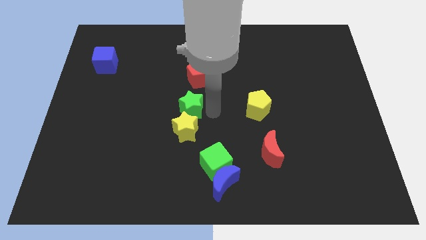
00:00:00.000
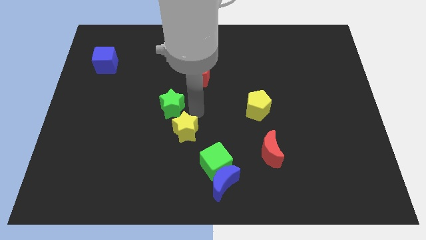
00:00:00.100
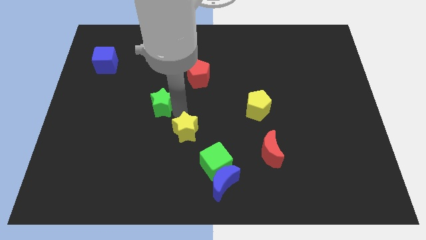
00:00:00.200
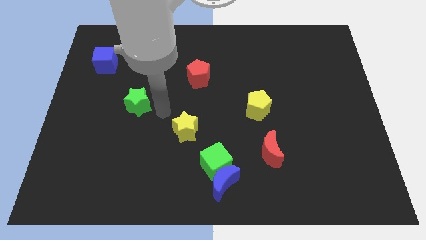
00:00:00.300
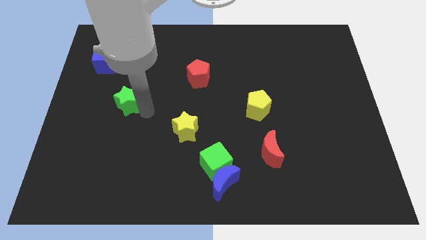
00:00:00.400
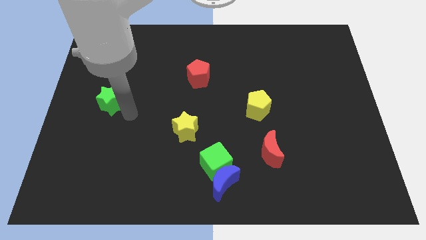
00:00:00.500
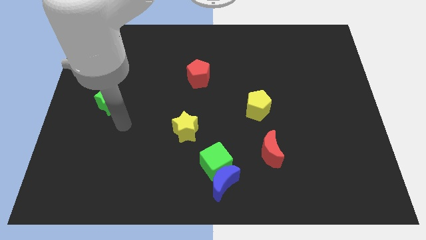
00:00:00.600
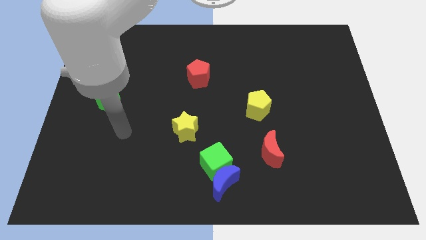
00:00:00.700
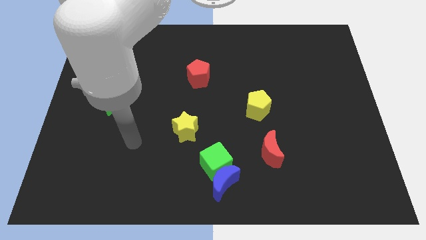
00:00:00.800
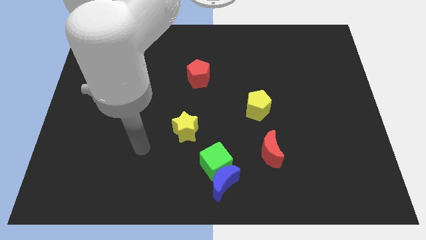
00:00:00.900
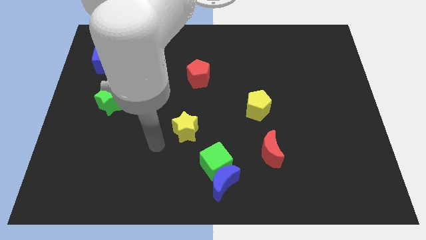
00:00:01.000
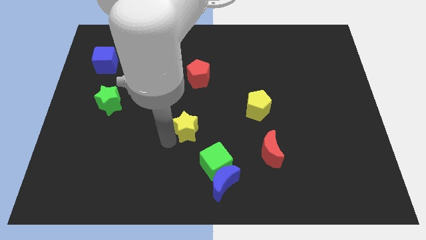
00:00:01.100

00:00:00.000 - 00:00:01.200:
push the green star towards the center left

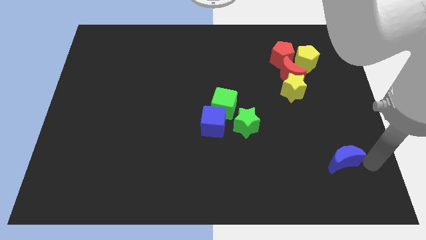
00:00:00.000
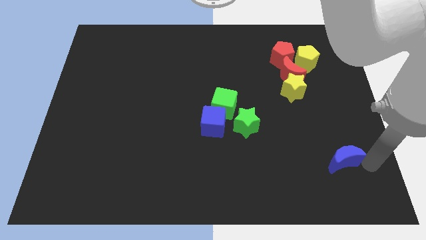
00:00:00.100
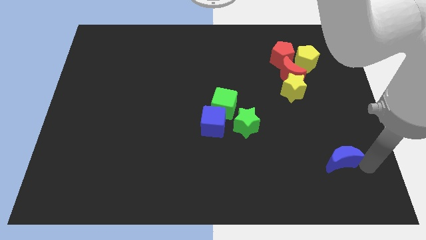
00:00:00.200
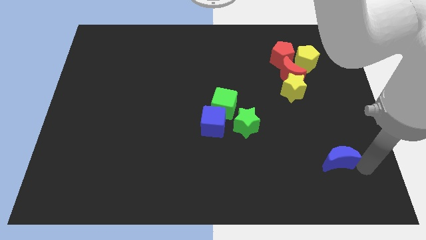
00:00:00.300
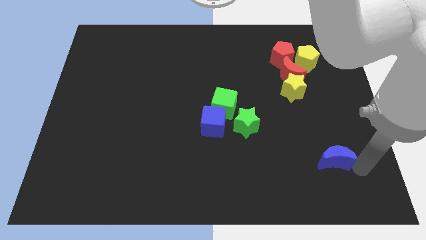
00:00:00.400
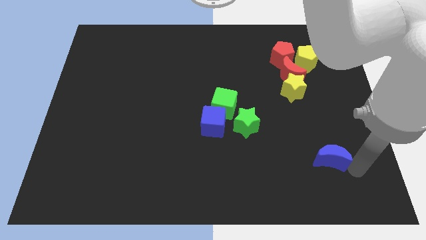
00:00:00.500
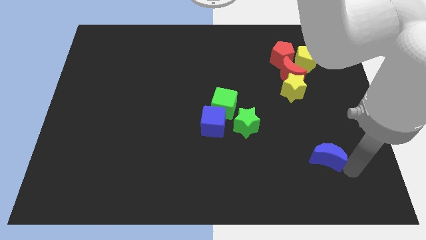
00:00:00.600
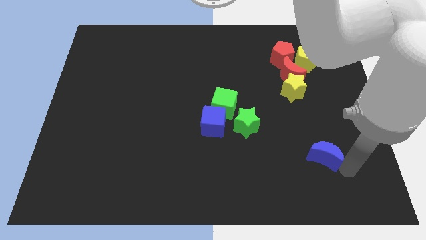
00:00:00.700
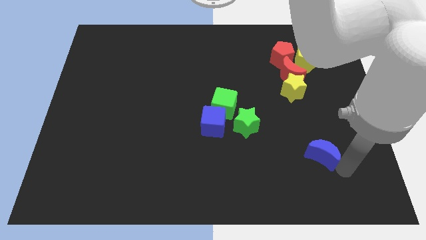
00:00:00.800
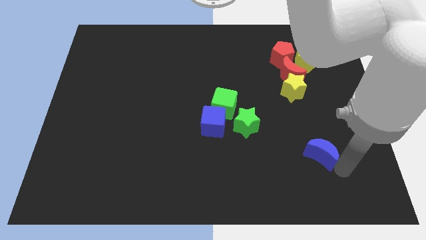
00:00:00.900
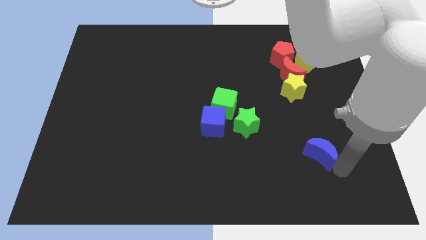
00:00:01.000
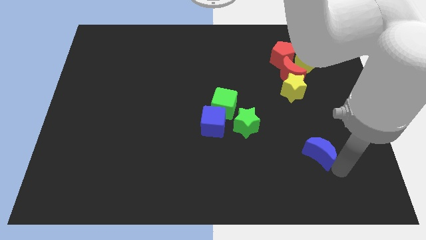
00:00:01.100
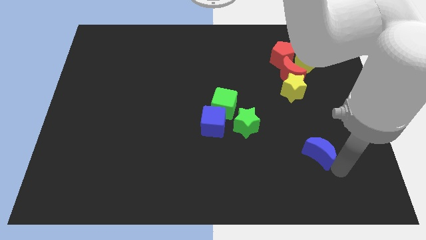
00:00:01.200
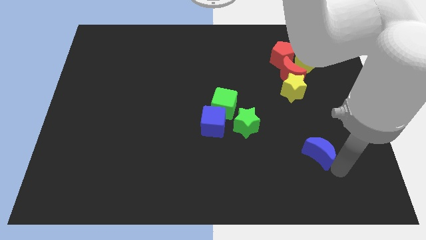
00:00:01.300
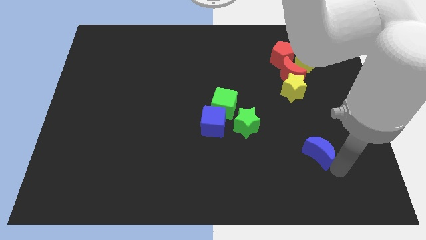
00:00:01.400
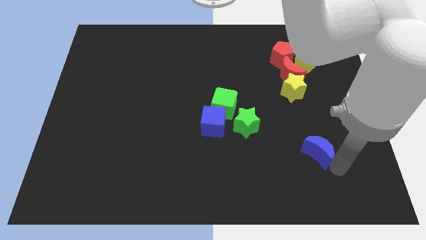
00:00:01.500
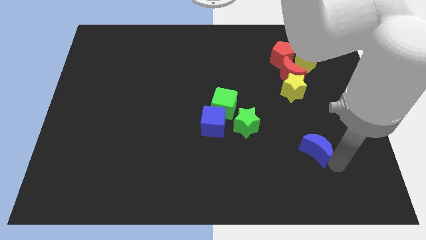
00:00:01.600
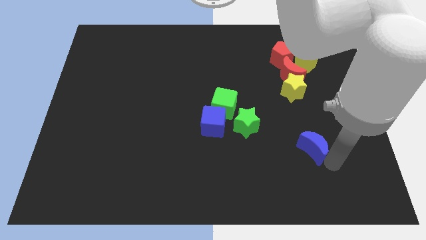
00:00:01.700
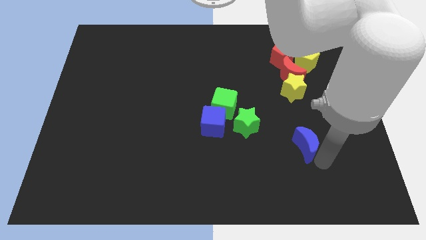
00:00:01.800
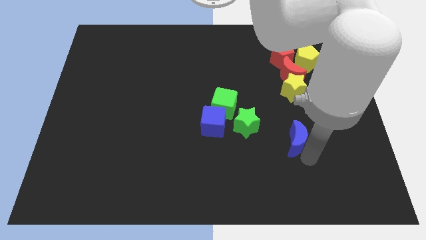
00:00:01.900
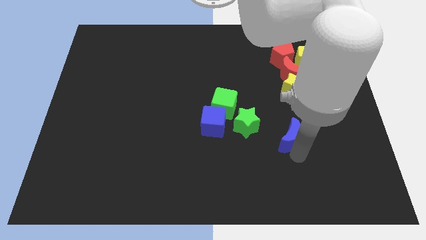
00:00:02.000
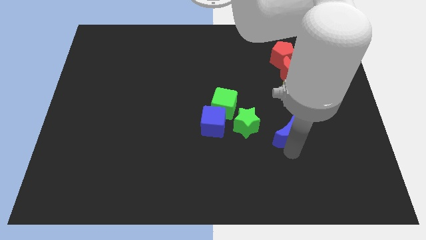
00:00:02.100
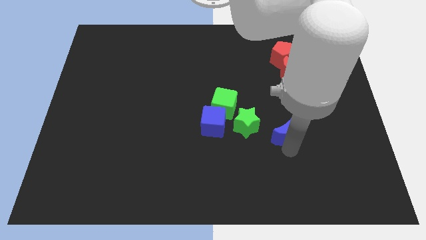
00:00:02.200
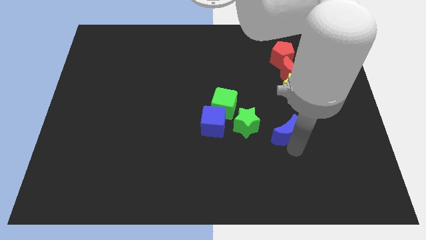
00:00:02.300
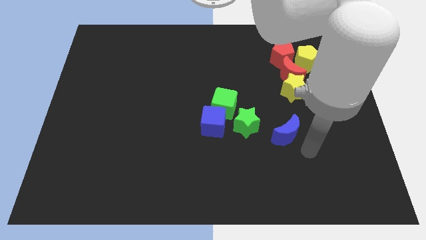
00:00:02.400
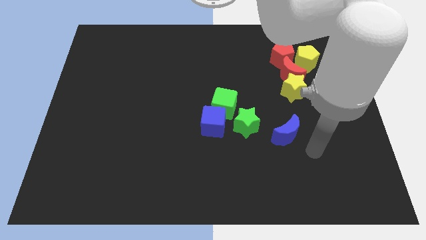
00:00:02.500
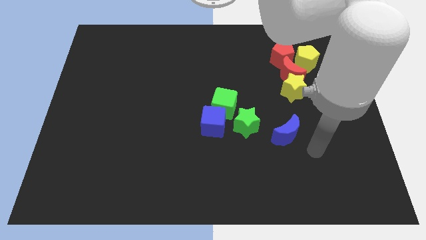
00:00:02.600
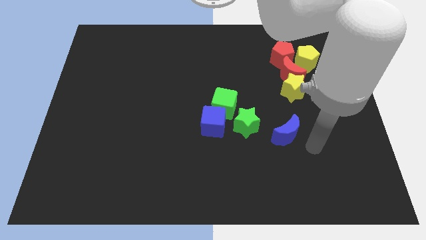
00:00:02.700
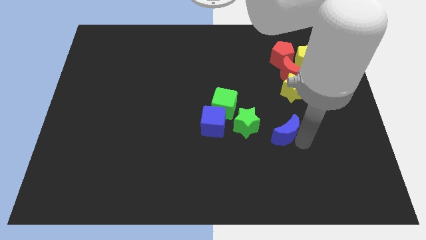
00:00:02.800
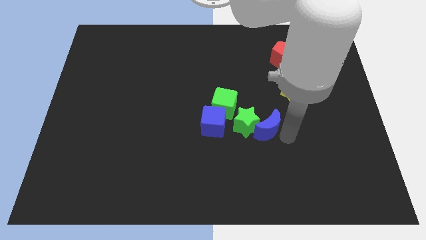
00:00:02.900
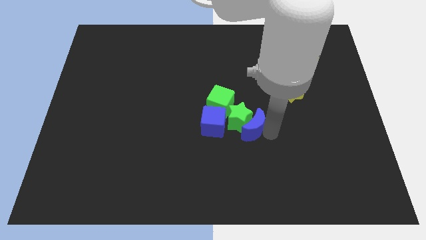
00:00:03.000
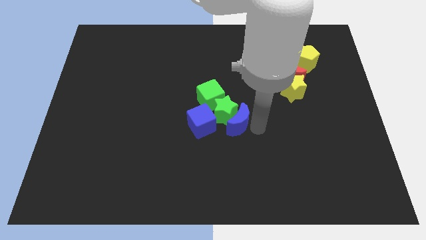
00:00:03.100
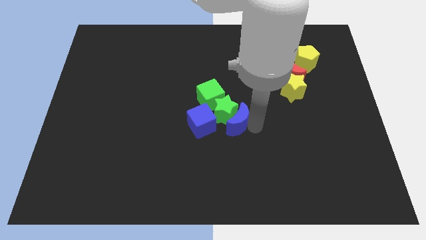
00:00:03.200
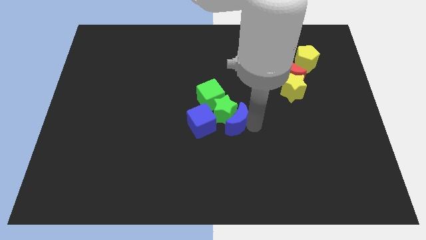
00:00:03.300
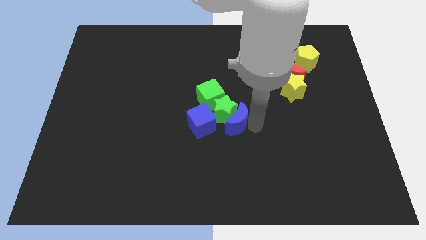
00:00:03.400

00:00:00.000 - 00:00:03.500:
add the blue crescent to both the green blocks and blue cube

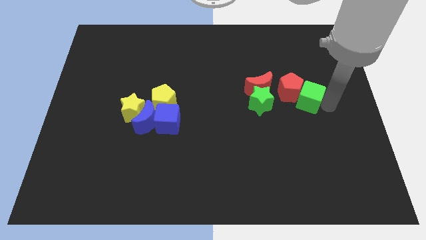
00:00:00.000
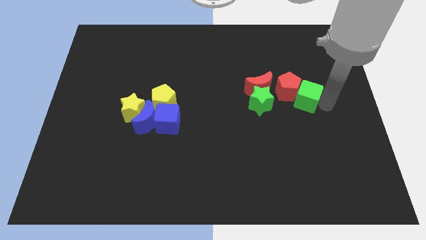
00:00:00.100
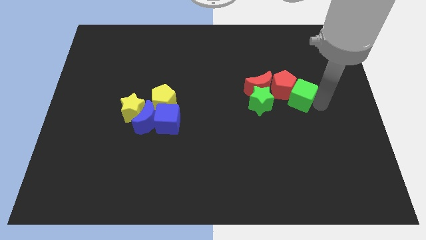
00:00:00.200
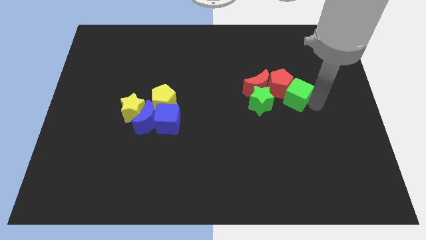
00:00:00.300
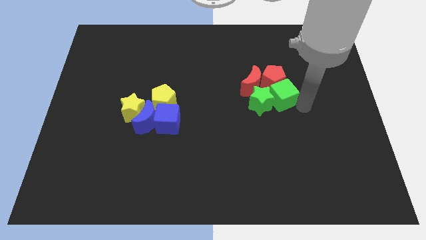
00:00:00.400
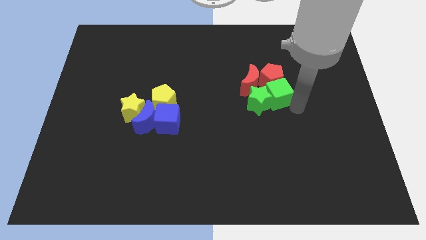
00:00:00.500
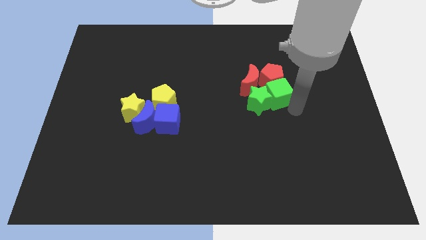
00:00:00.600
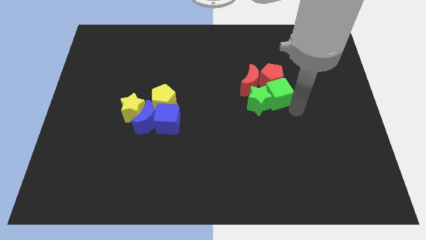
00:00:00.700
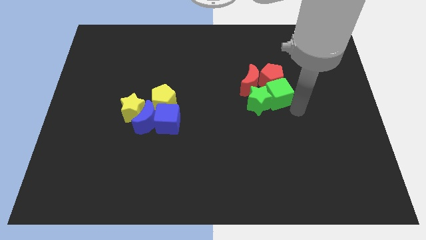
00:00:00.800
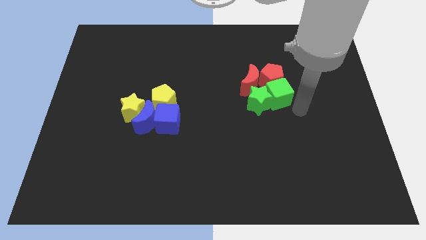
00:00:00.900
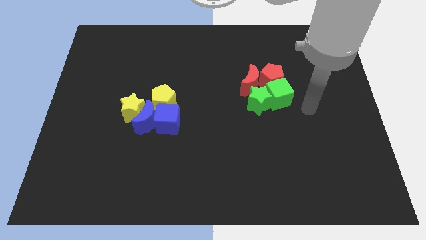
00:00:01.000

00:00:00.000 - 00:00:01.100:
move the green cube to the right of the green star

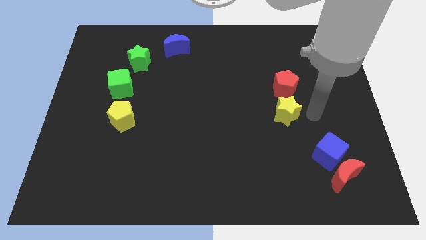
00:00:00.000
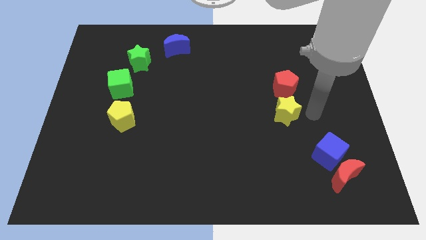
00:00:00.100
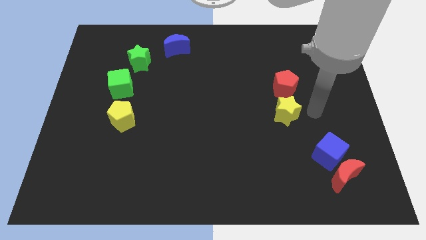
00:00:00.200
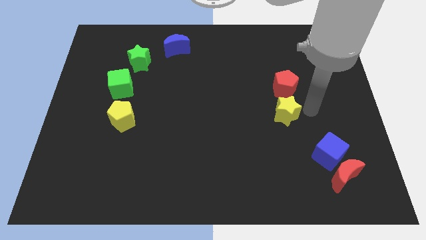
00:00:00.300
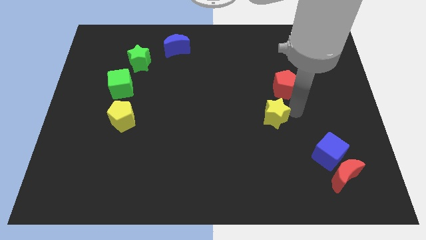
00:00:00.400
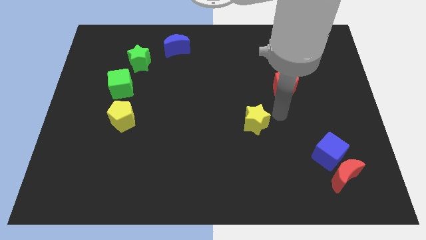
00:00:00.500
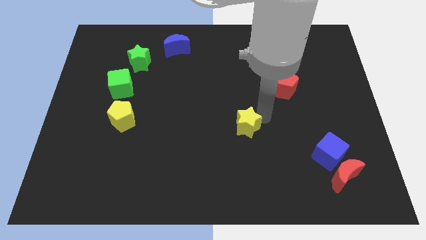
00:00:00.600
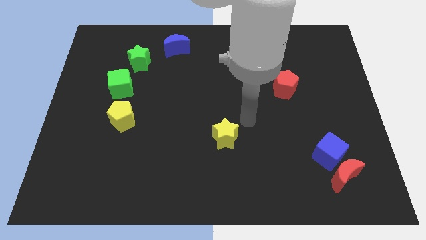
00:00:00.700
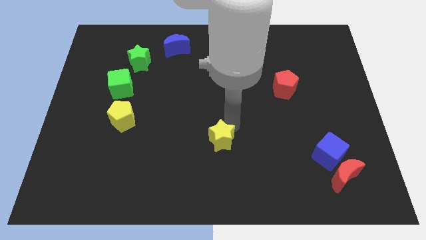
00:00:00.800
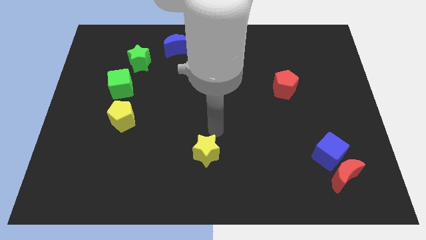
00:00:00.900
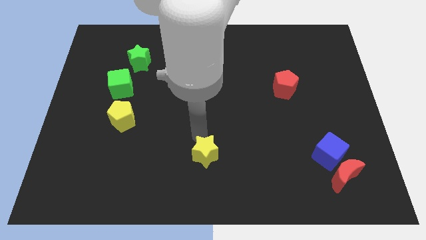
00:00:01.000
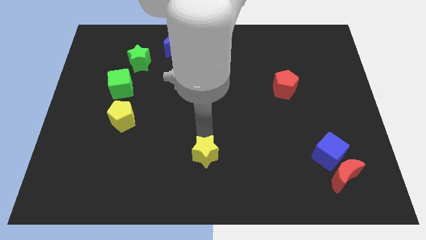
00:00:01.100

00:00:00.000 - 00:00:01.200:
separate the yellow star and the red pentagon

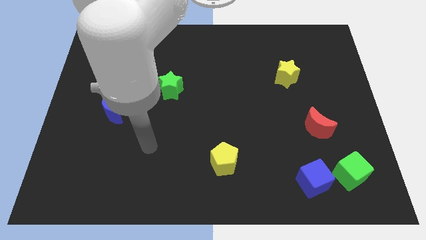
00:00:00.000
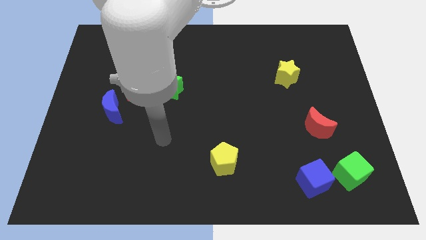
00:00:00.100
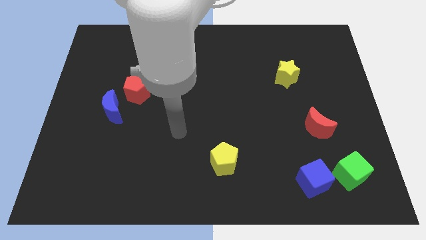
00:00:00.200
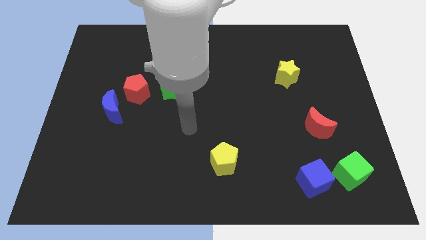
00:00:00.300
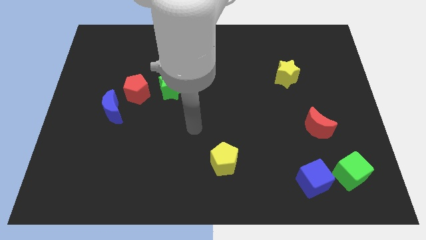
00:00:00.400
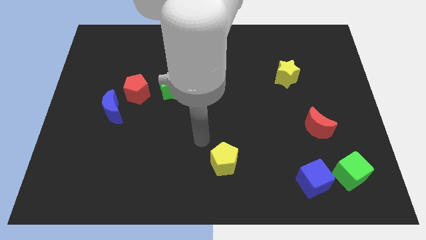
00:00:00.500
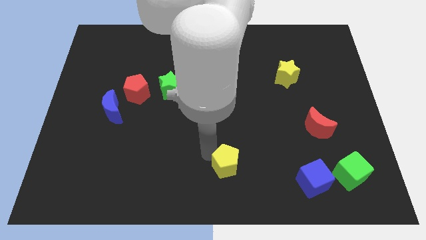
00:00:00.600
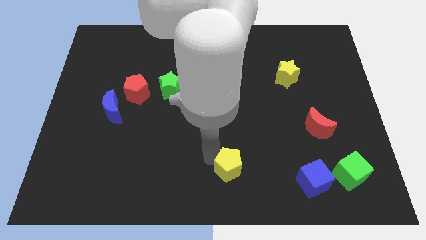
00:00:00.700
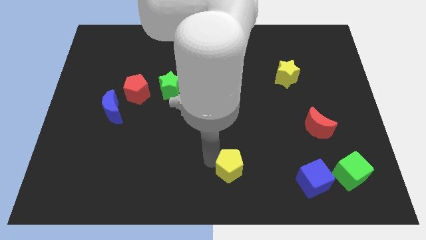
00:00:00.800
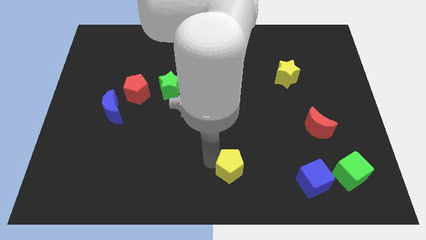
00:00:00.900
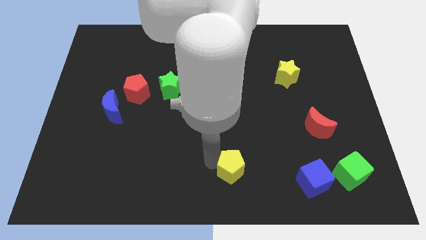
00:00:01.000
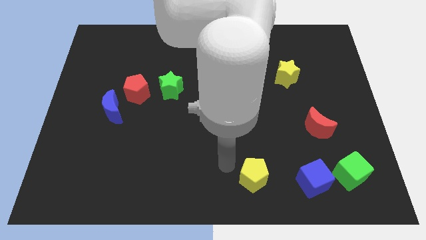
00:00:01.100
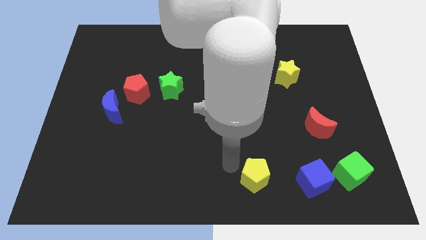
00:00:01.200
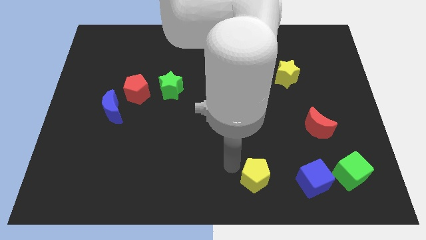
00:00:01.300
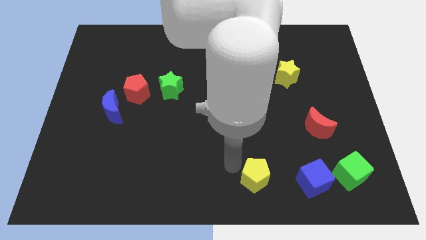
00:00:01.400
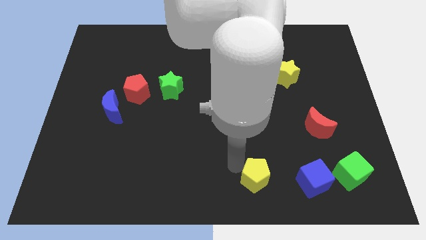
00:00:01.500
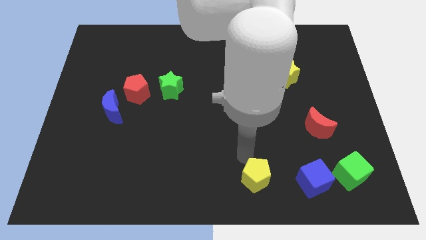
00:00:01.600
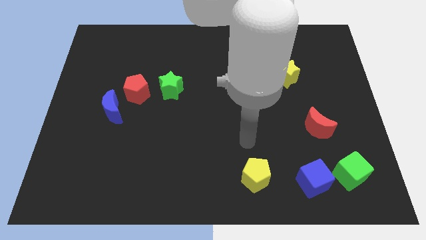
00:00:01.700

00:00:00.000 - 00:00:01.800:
push the yellow pentagon to the left of the blue cube

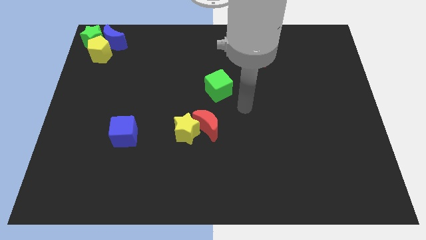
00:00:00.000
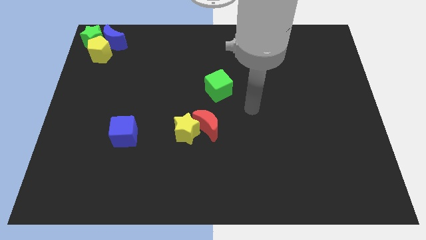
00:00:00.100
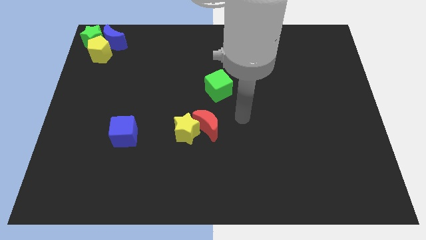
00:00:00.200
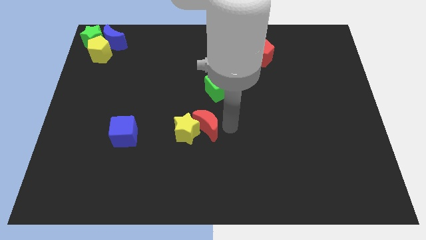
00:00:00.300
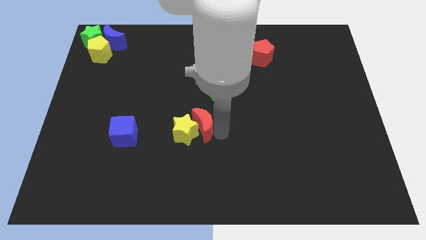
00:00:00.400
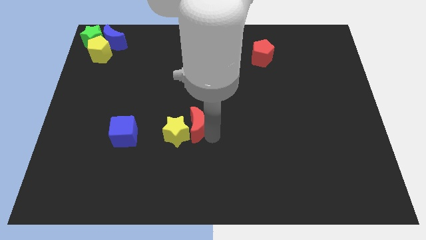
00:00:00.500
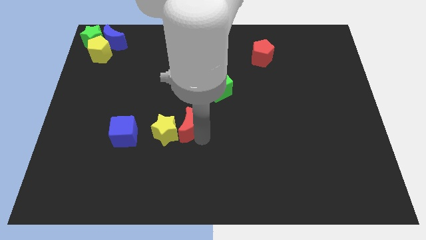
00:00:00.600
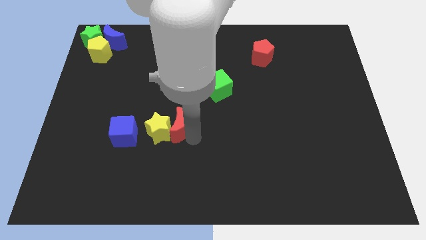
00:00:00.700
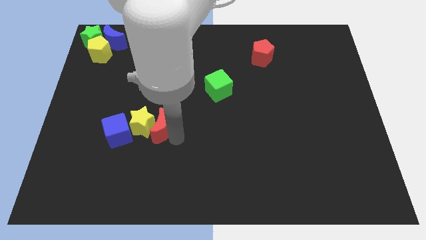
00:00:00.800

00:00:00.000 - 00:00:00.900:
push the yellow star along with red crescent into the blue cube
